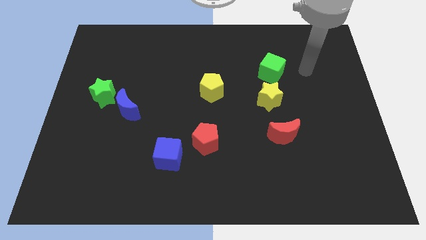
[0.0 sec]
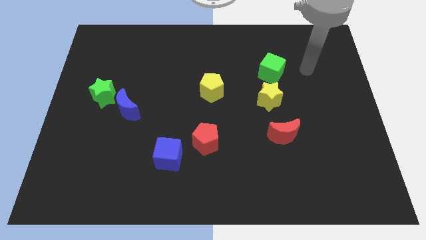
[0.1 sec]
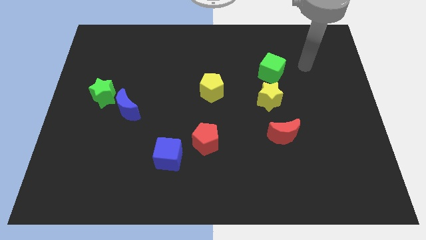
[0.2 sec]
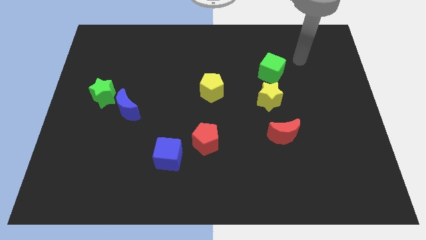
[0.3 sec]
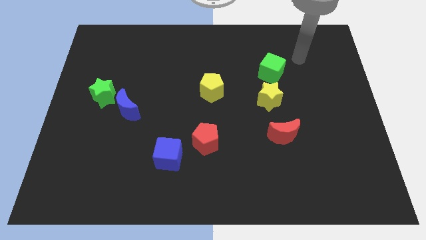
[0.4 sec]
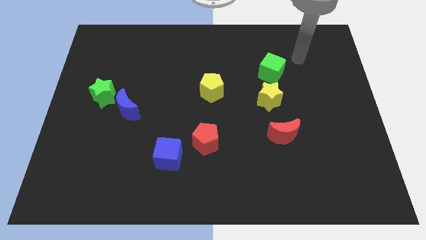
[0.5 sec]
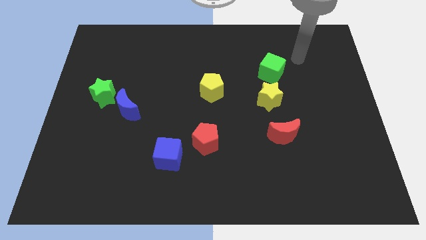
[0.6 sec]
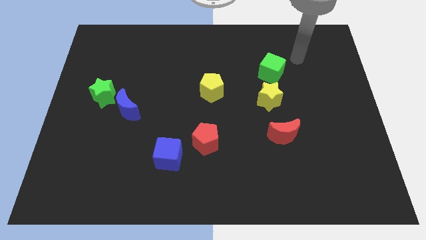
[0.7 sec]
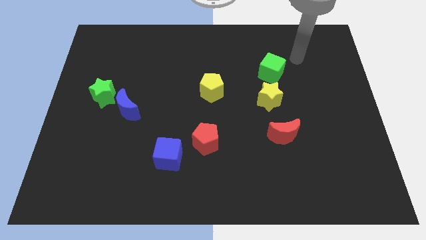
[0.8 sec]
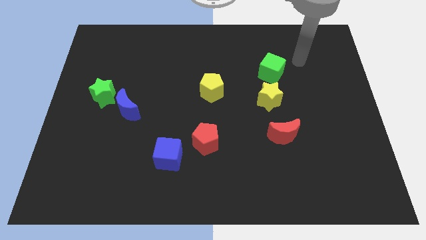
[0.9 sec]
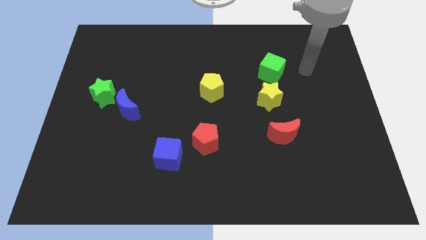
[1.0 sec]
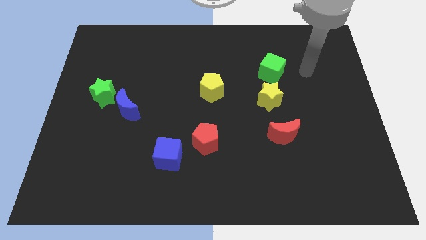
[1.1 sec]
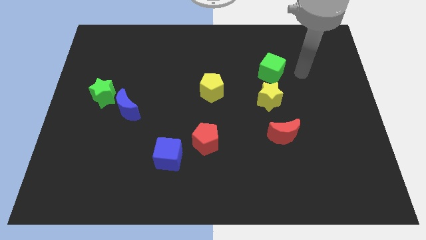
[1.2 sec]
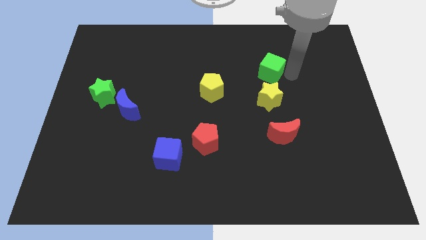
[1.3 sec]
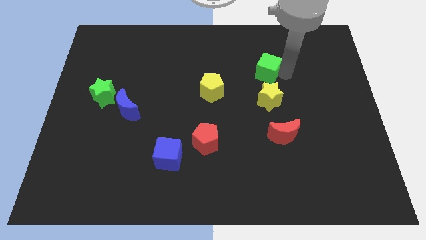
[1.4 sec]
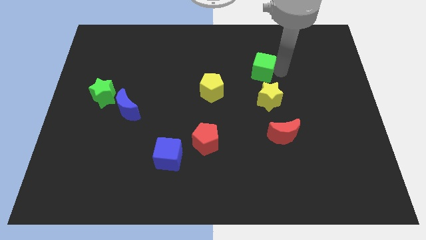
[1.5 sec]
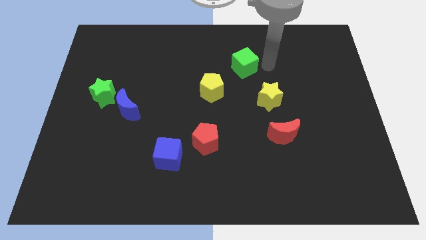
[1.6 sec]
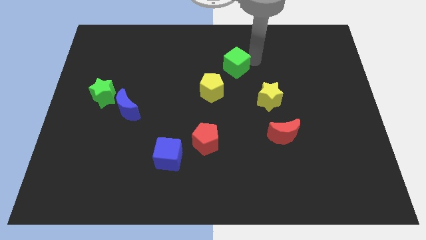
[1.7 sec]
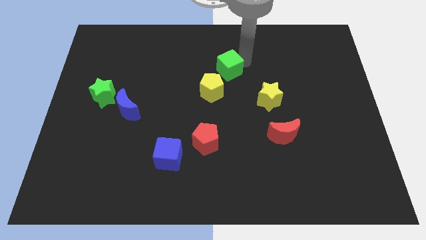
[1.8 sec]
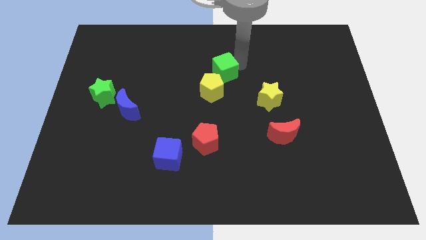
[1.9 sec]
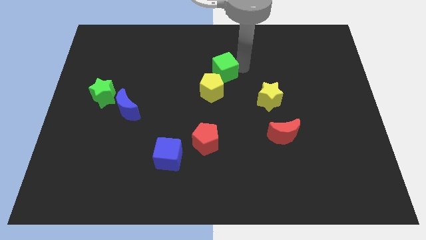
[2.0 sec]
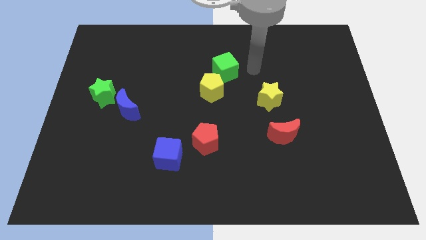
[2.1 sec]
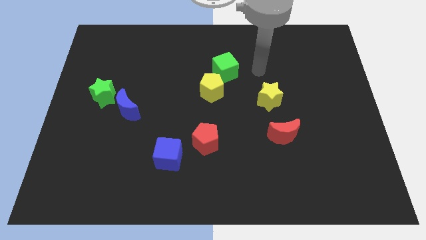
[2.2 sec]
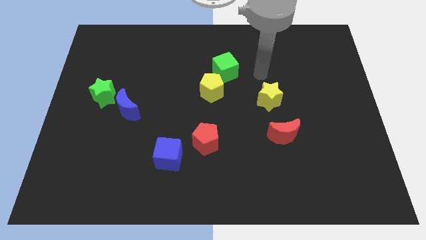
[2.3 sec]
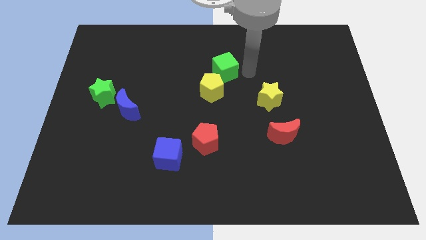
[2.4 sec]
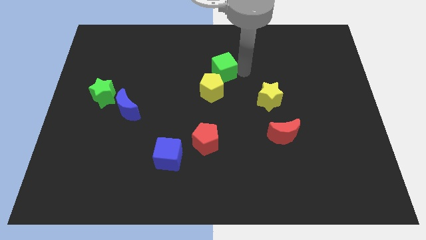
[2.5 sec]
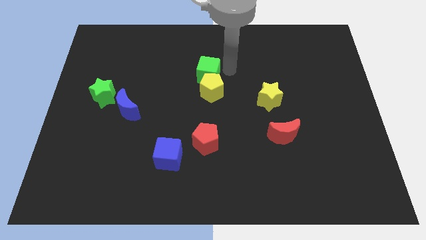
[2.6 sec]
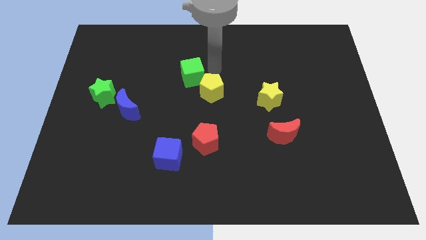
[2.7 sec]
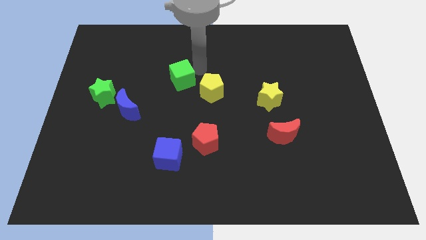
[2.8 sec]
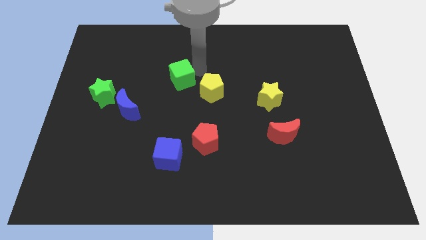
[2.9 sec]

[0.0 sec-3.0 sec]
push the green cube towards the left side of the board

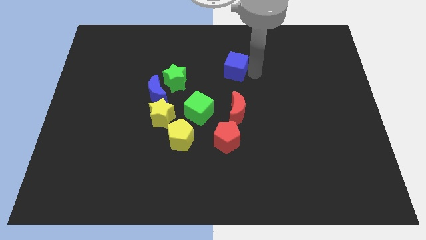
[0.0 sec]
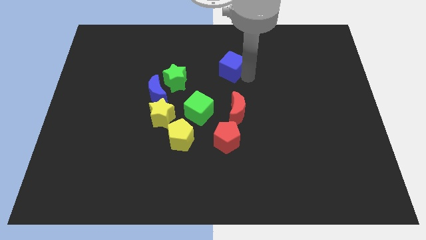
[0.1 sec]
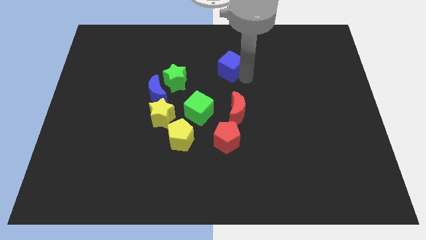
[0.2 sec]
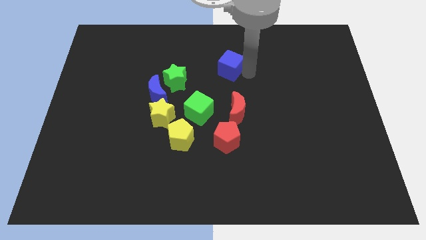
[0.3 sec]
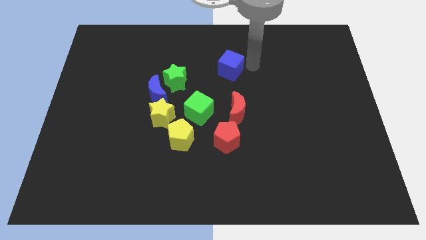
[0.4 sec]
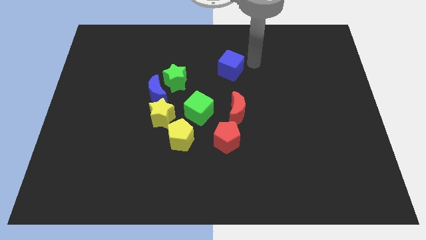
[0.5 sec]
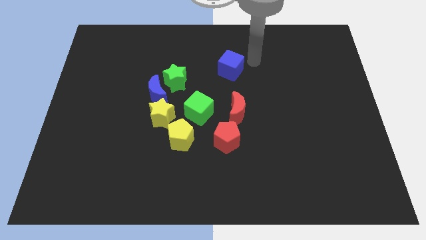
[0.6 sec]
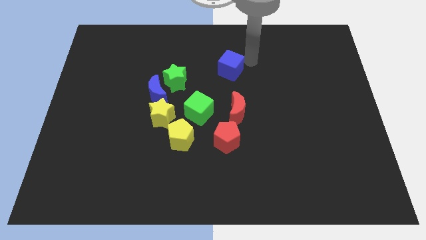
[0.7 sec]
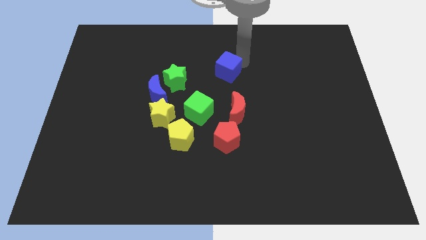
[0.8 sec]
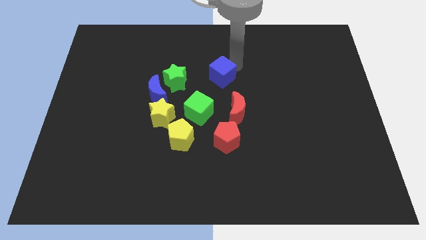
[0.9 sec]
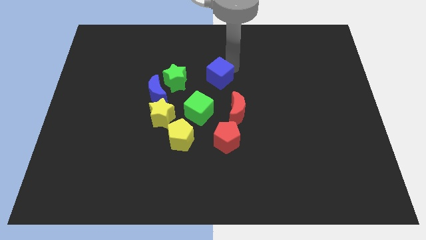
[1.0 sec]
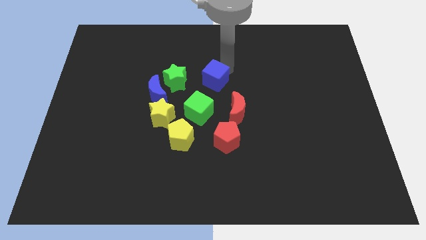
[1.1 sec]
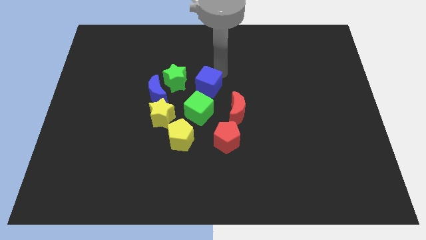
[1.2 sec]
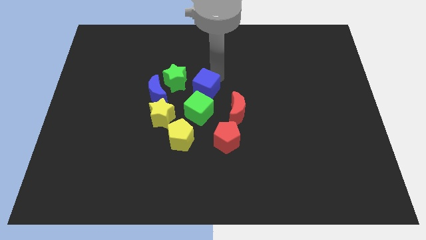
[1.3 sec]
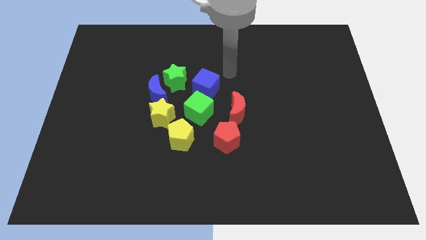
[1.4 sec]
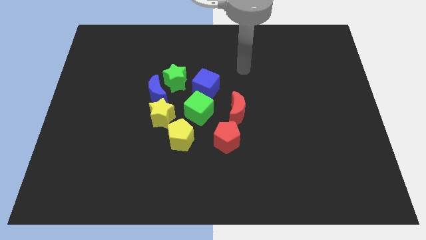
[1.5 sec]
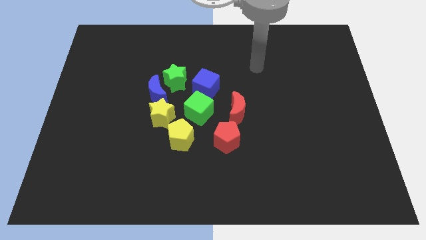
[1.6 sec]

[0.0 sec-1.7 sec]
push the blue cube into the green cube

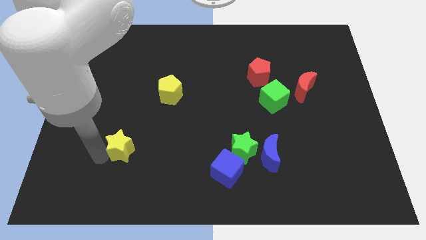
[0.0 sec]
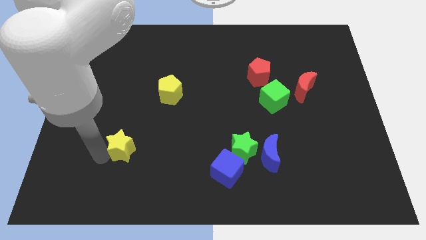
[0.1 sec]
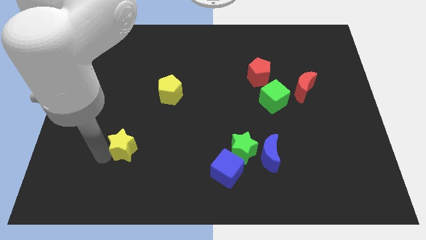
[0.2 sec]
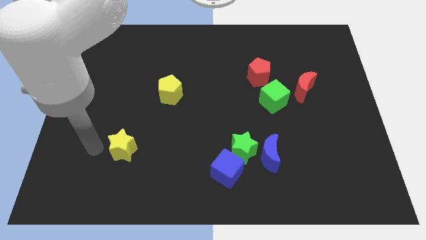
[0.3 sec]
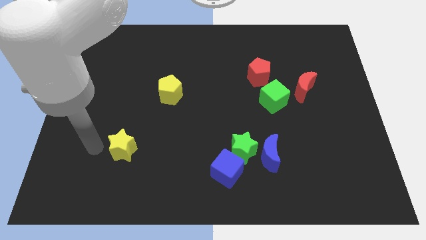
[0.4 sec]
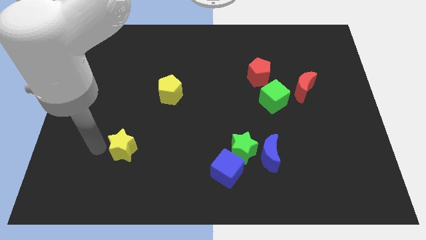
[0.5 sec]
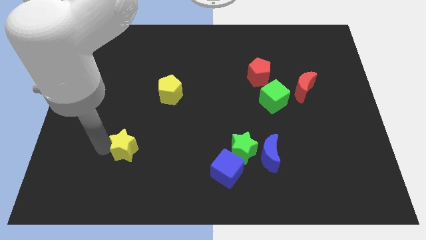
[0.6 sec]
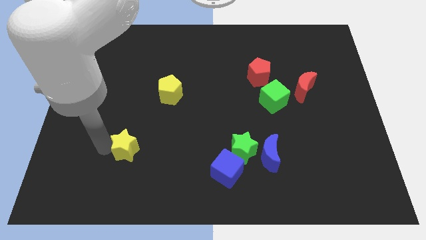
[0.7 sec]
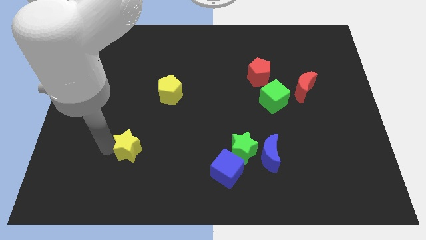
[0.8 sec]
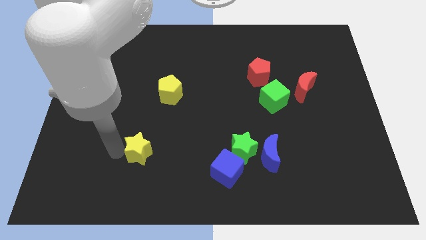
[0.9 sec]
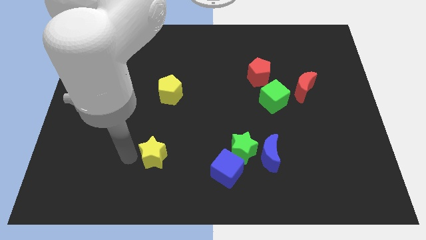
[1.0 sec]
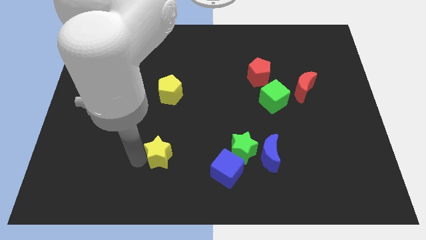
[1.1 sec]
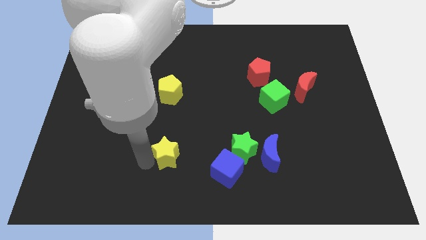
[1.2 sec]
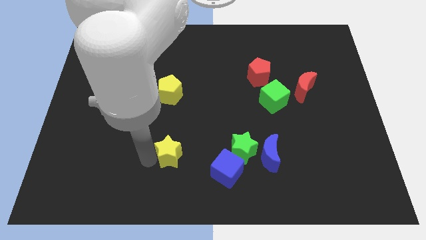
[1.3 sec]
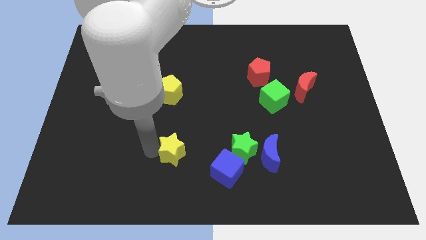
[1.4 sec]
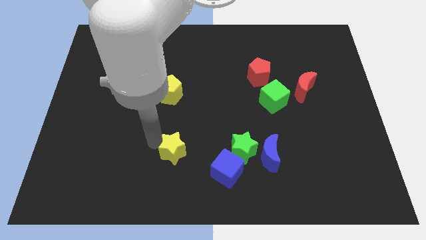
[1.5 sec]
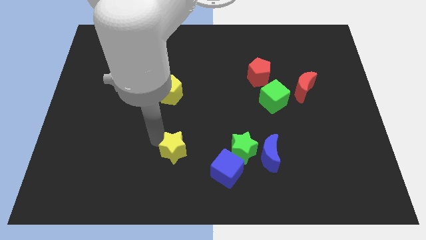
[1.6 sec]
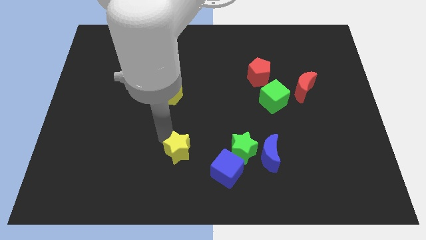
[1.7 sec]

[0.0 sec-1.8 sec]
place the yellow star vertically below the yellow pentagon

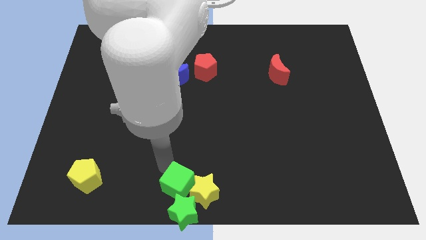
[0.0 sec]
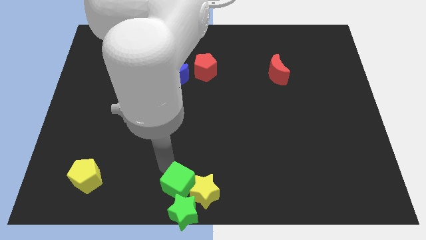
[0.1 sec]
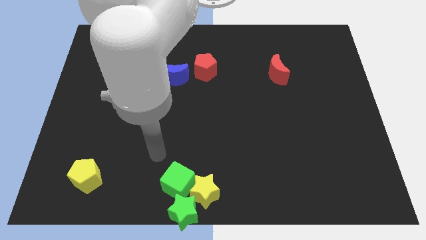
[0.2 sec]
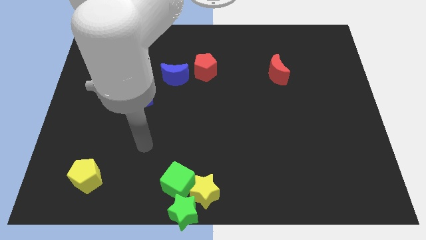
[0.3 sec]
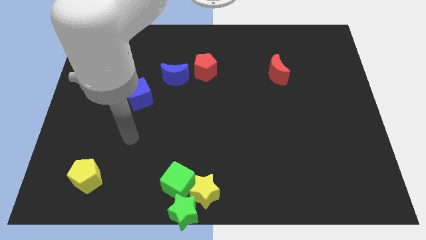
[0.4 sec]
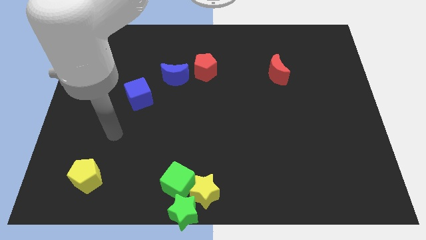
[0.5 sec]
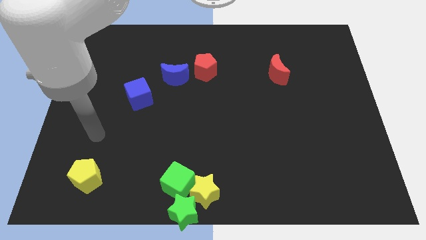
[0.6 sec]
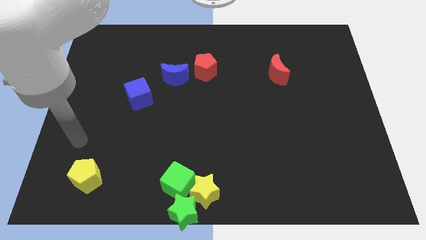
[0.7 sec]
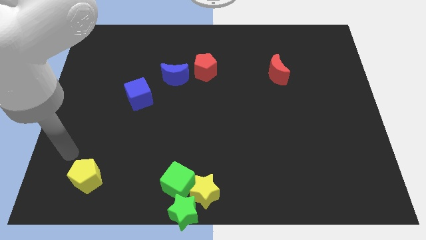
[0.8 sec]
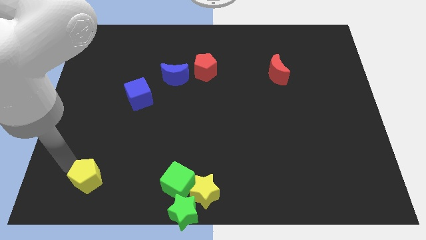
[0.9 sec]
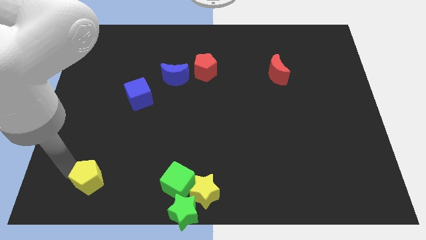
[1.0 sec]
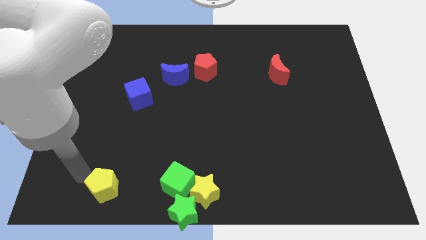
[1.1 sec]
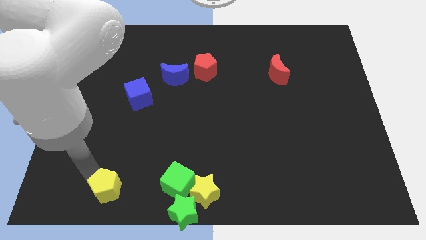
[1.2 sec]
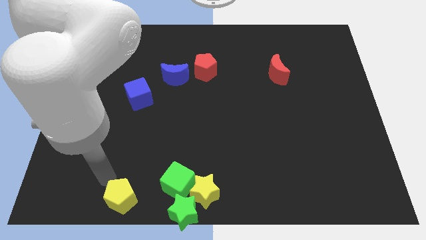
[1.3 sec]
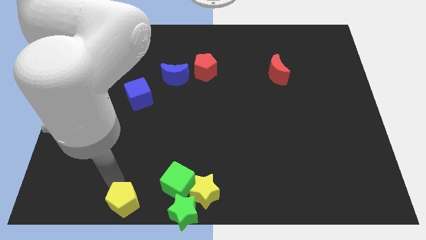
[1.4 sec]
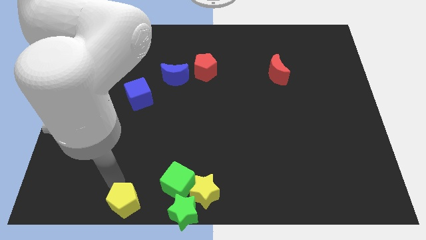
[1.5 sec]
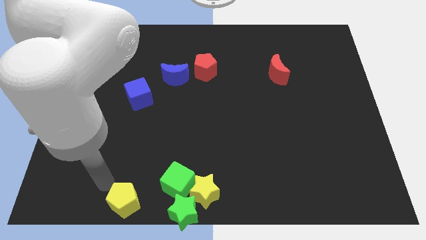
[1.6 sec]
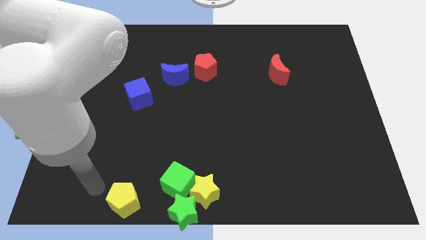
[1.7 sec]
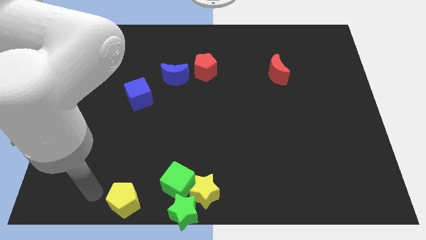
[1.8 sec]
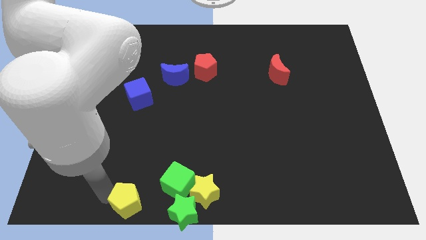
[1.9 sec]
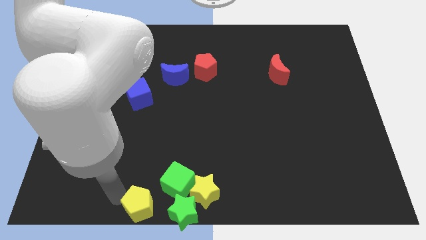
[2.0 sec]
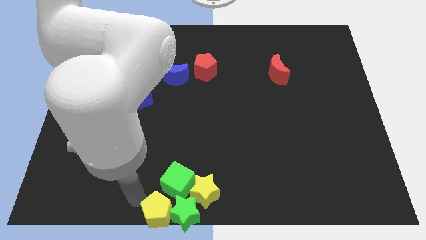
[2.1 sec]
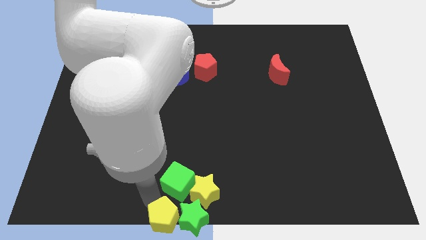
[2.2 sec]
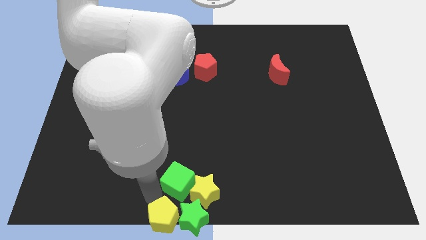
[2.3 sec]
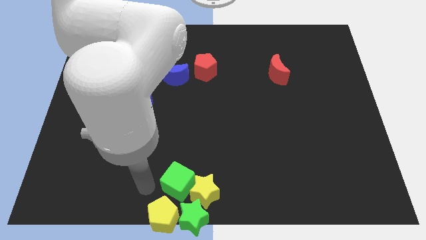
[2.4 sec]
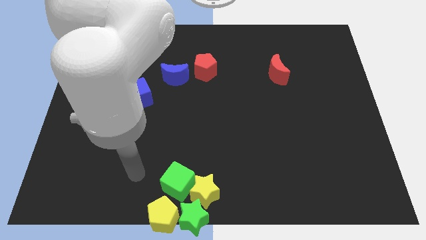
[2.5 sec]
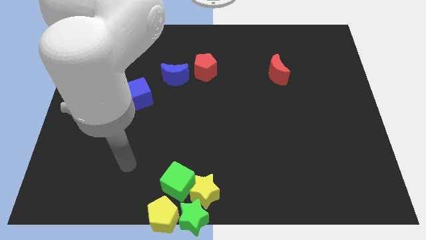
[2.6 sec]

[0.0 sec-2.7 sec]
place the yellow pentagon to the left side of green star
